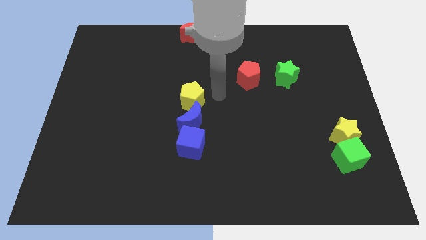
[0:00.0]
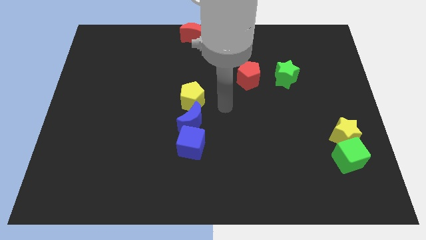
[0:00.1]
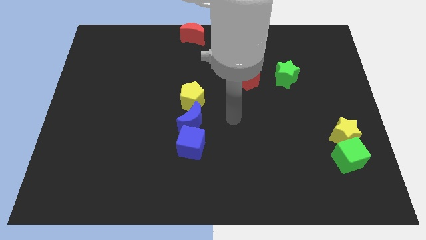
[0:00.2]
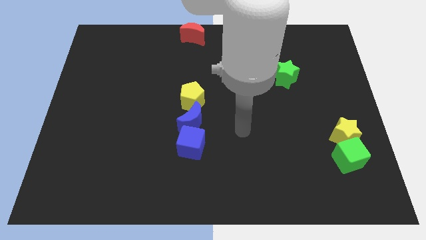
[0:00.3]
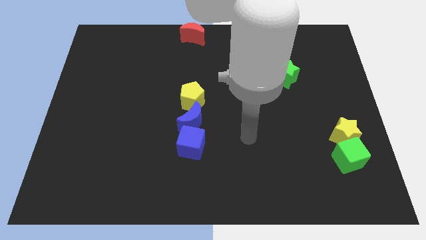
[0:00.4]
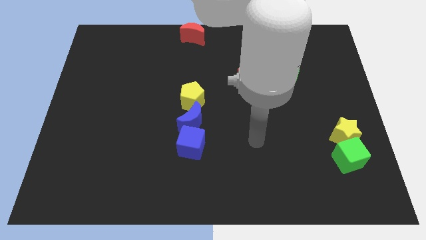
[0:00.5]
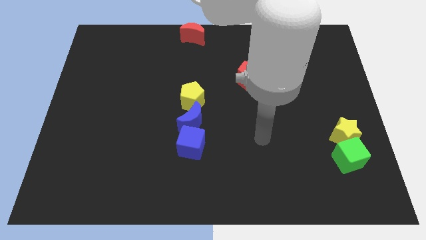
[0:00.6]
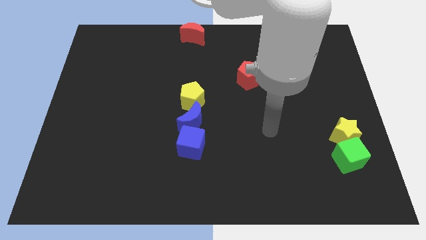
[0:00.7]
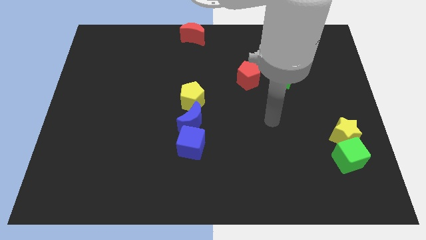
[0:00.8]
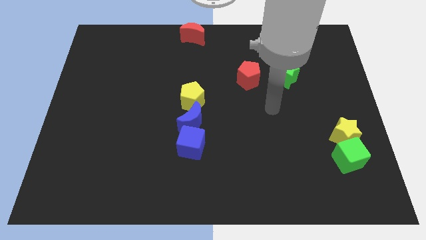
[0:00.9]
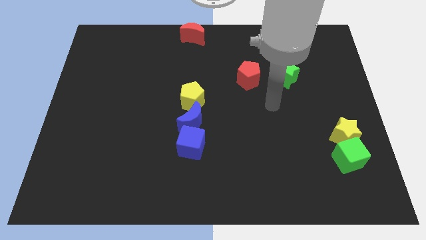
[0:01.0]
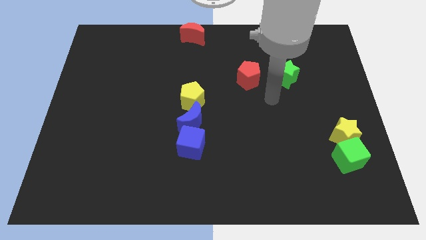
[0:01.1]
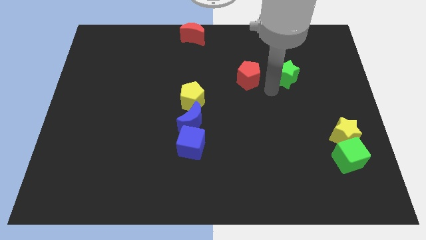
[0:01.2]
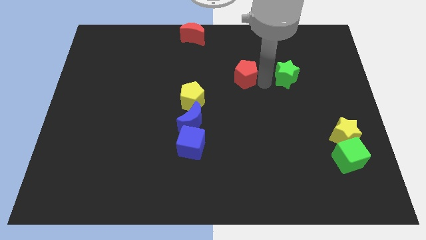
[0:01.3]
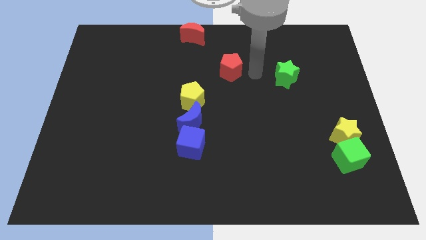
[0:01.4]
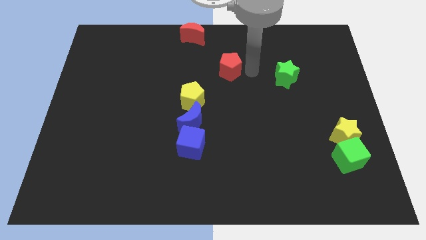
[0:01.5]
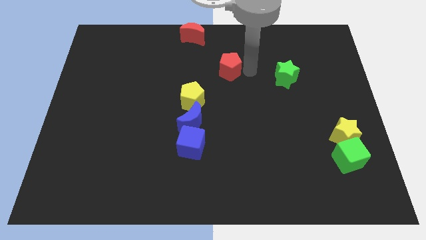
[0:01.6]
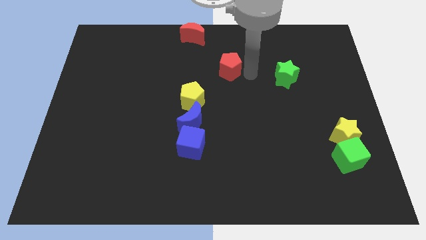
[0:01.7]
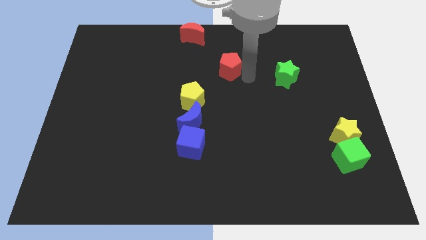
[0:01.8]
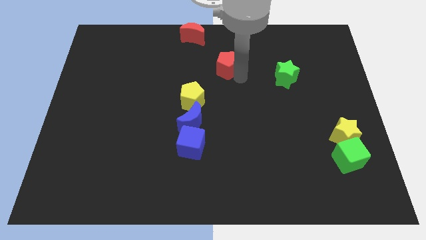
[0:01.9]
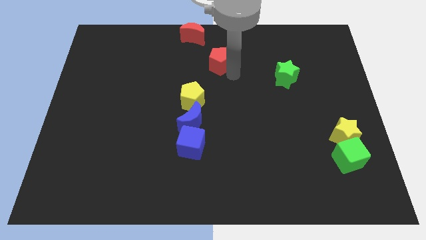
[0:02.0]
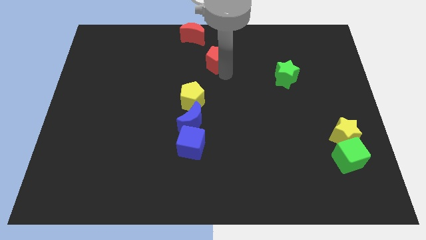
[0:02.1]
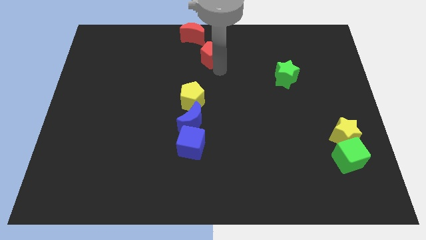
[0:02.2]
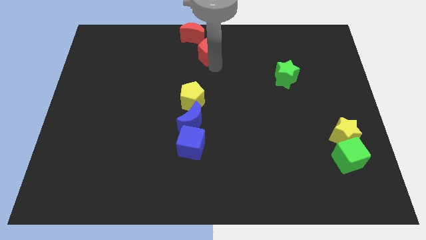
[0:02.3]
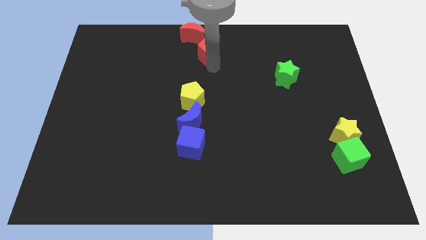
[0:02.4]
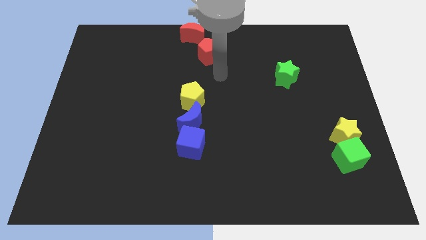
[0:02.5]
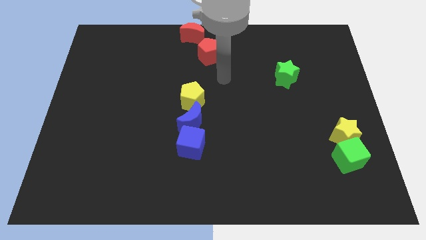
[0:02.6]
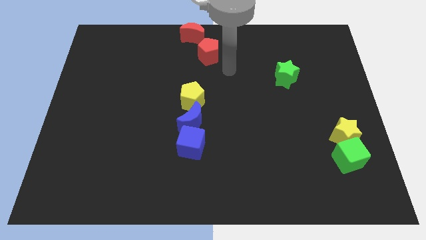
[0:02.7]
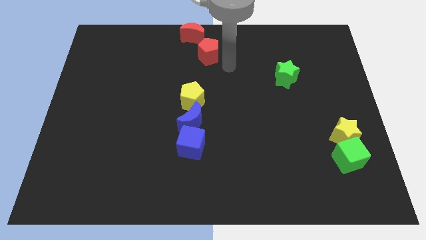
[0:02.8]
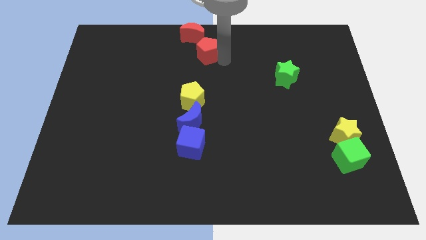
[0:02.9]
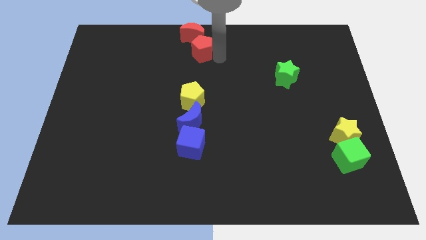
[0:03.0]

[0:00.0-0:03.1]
push red pentagon towards red moon

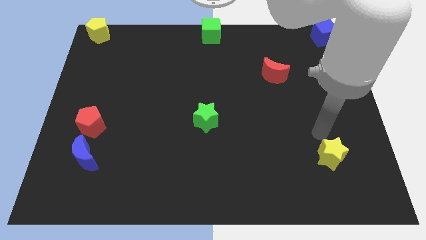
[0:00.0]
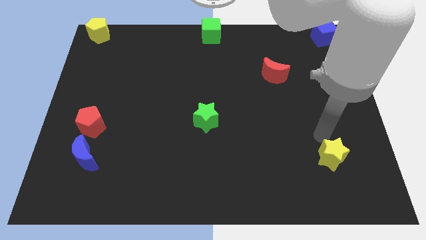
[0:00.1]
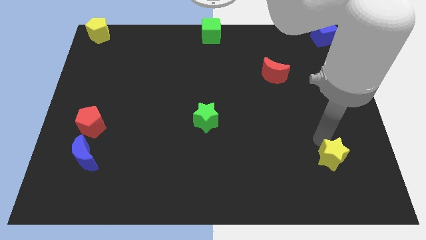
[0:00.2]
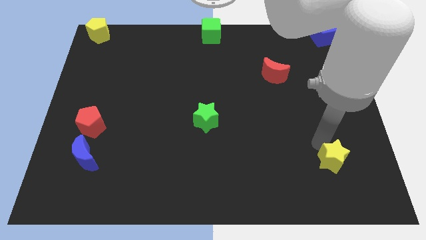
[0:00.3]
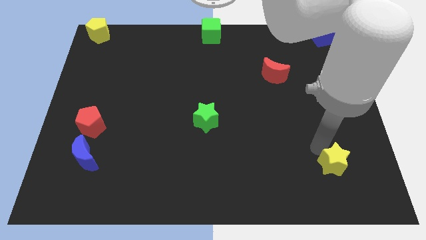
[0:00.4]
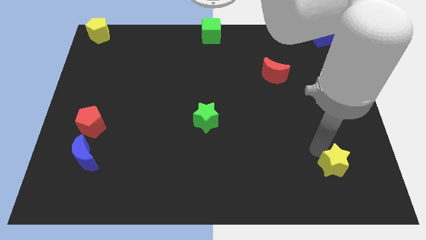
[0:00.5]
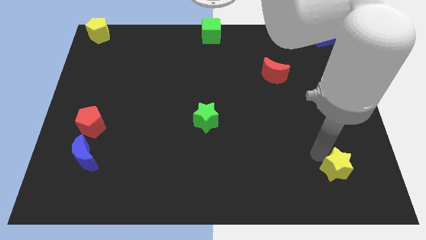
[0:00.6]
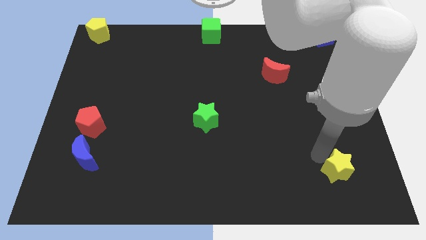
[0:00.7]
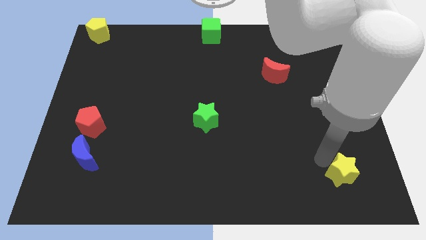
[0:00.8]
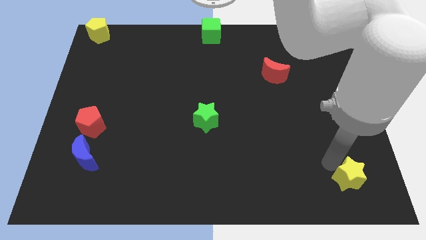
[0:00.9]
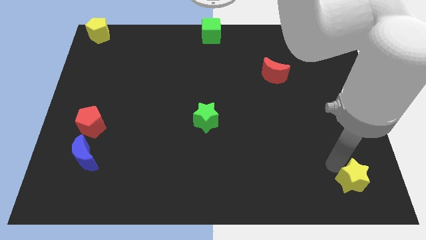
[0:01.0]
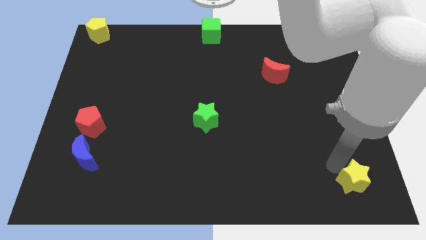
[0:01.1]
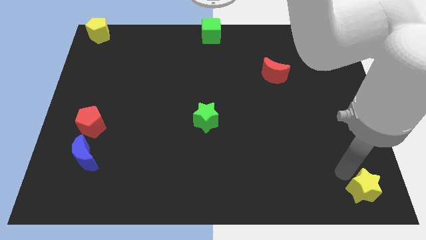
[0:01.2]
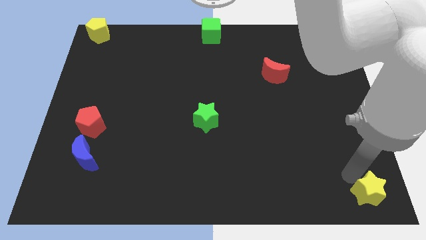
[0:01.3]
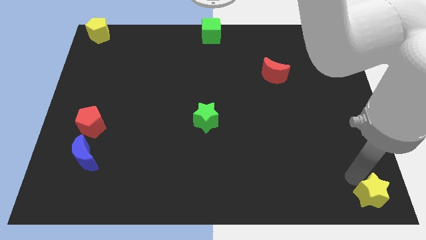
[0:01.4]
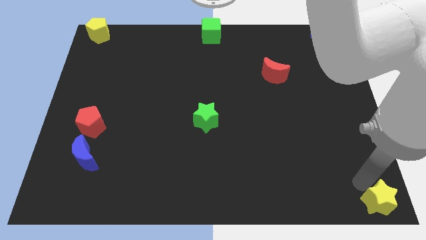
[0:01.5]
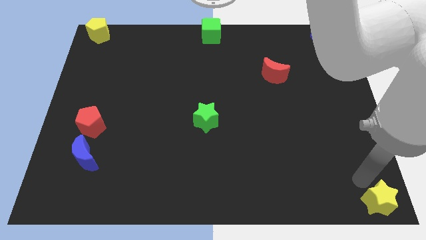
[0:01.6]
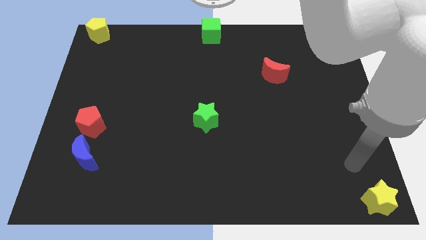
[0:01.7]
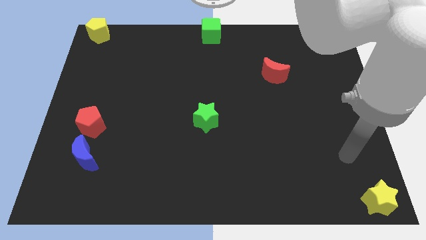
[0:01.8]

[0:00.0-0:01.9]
slide the yellow star to the bottom right side of the board

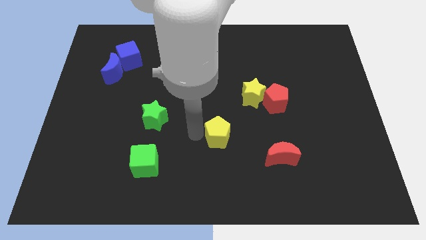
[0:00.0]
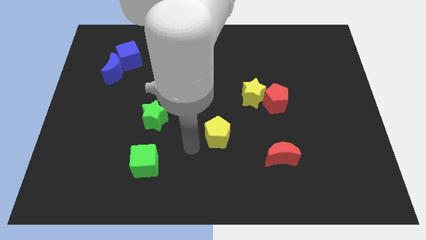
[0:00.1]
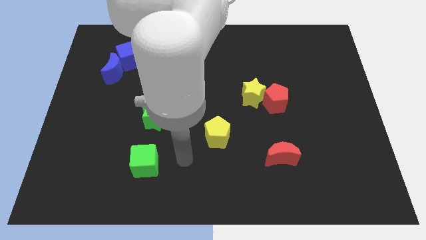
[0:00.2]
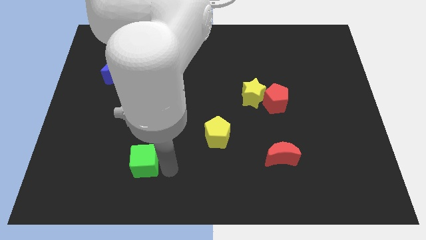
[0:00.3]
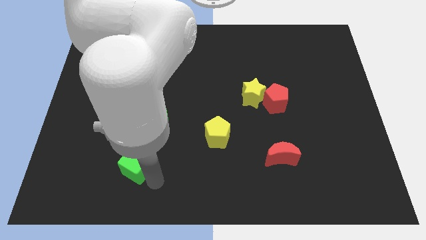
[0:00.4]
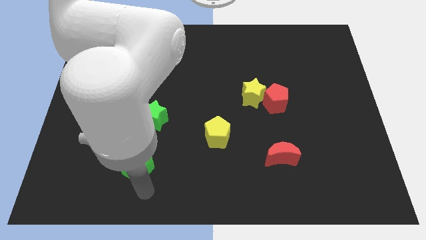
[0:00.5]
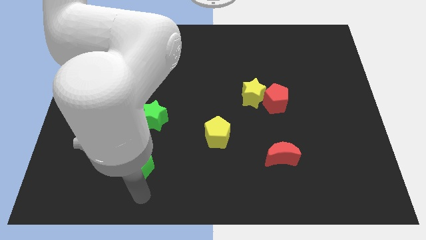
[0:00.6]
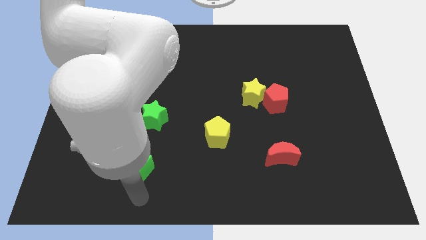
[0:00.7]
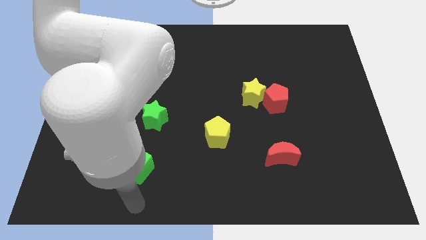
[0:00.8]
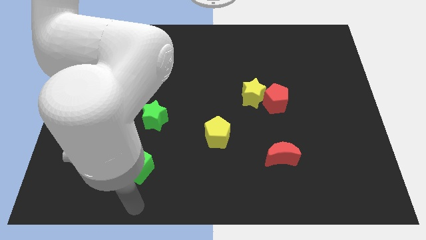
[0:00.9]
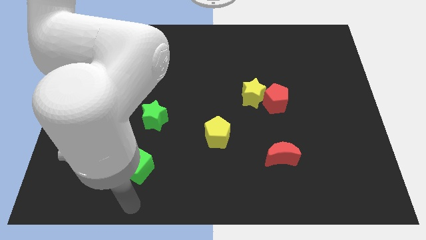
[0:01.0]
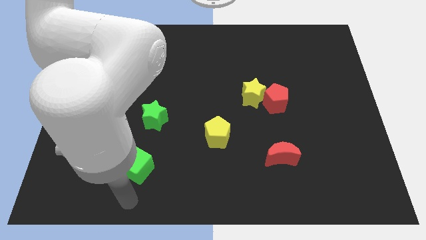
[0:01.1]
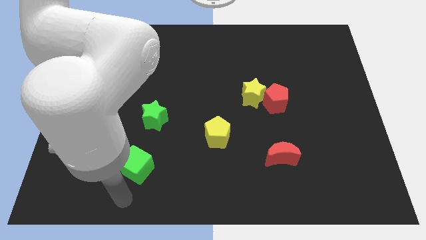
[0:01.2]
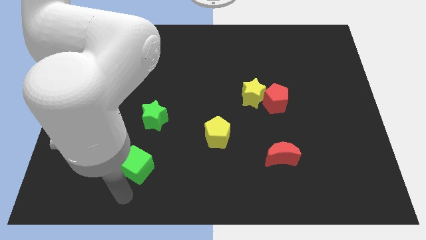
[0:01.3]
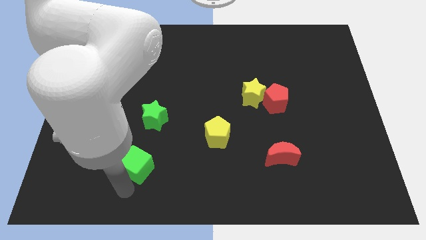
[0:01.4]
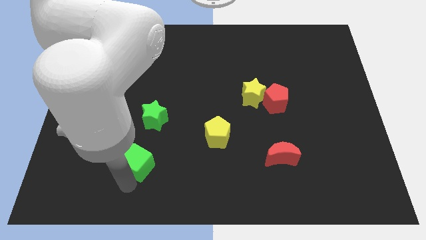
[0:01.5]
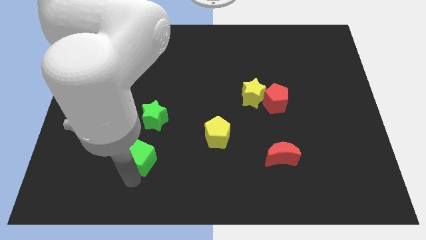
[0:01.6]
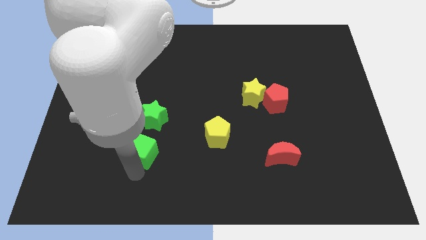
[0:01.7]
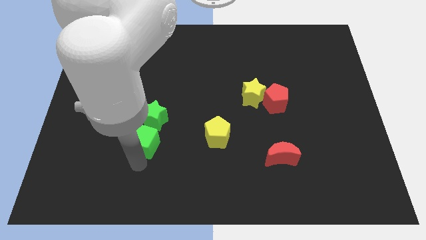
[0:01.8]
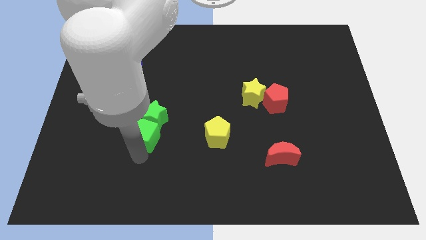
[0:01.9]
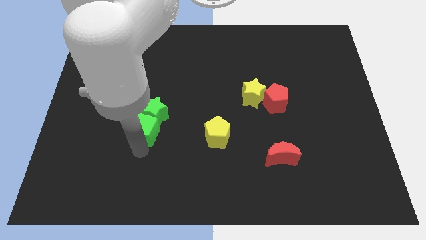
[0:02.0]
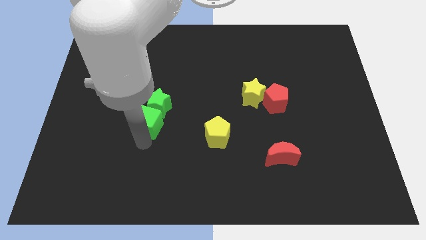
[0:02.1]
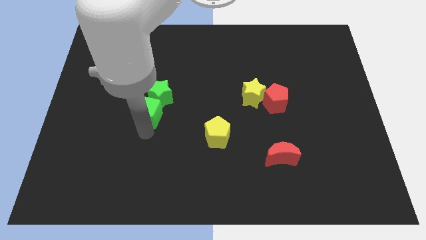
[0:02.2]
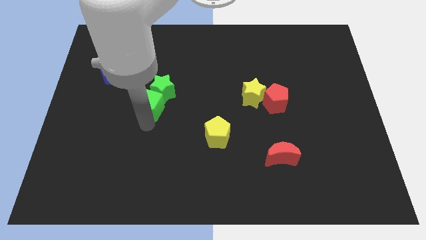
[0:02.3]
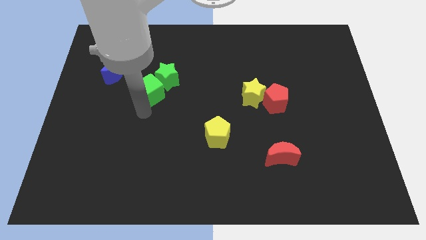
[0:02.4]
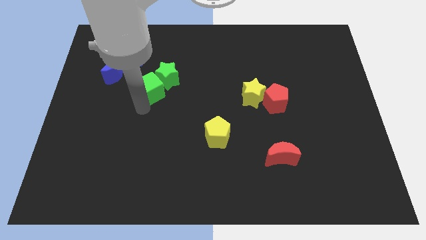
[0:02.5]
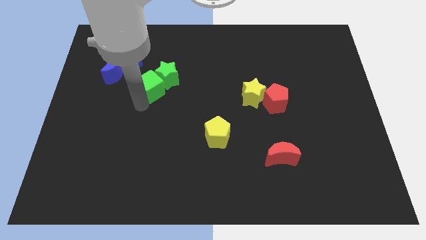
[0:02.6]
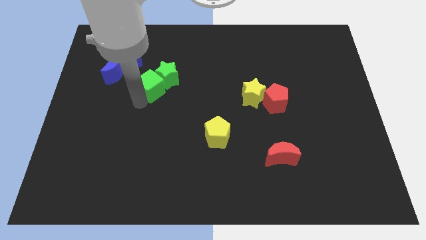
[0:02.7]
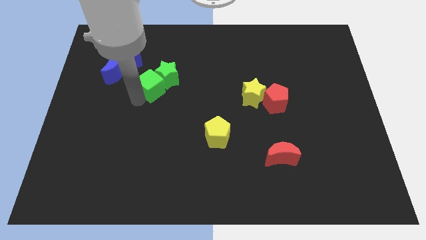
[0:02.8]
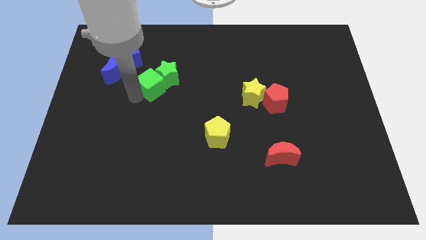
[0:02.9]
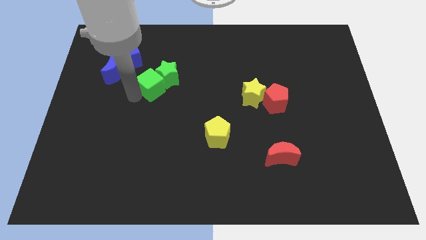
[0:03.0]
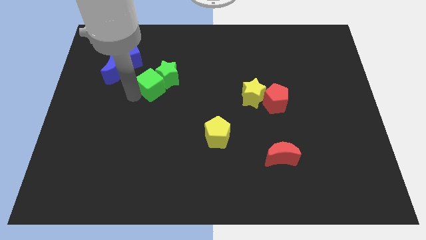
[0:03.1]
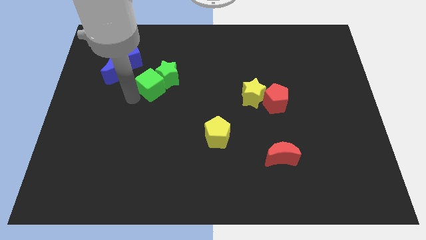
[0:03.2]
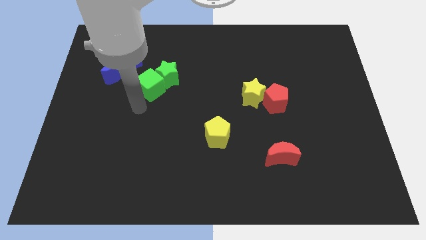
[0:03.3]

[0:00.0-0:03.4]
push green cube into the green star

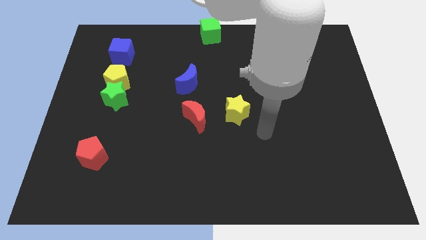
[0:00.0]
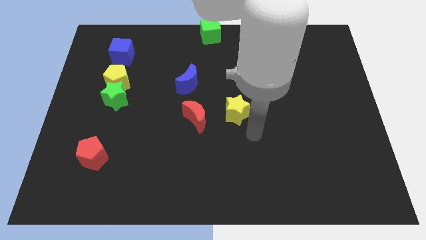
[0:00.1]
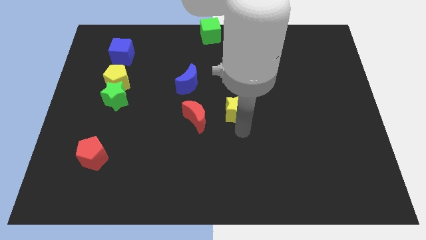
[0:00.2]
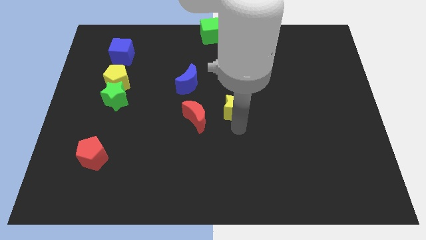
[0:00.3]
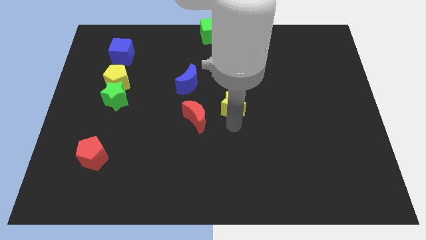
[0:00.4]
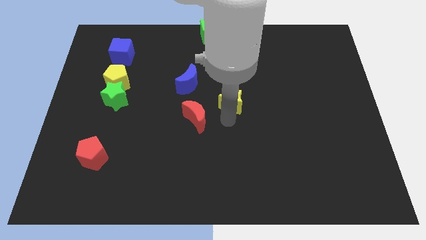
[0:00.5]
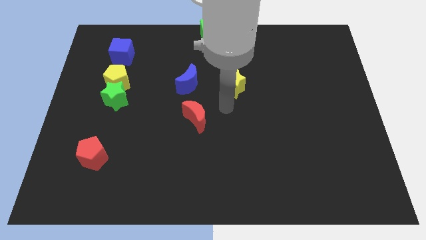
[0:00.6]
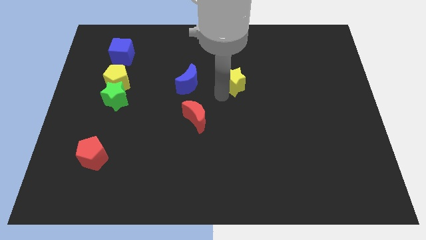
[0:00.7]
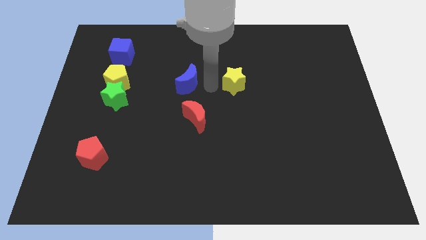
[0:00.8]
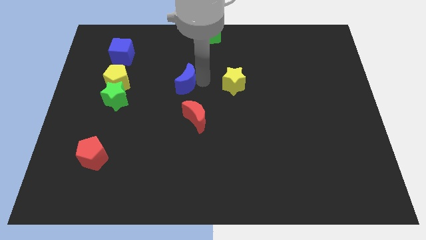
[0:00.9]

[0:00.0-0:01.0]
move the yellow star slightly upwards towards the right side of the blue crescent
